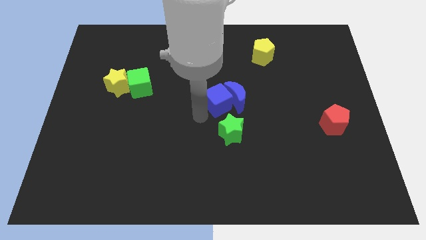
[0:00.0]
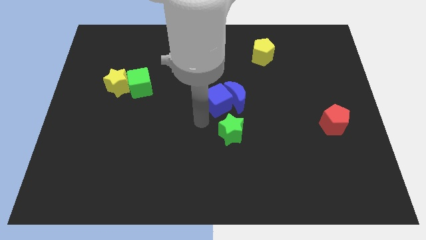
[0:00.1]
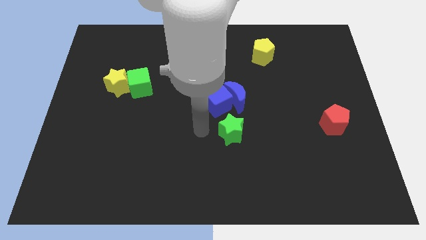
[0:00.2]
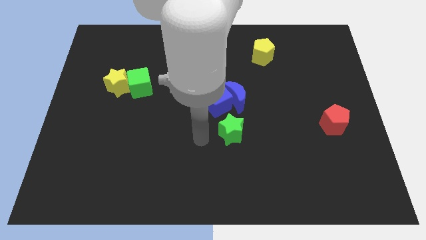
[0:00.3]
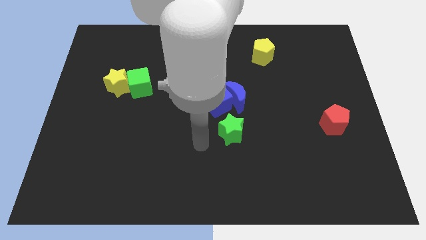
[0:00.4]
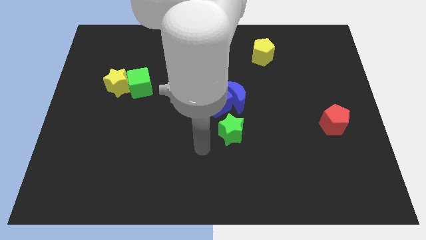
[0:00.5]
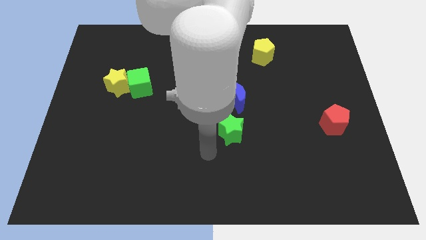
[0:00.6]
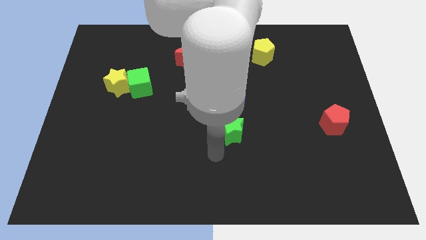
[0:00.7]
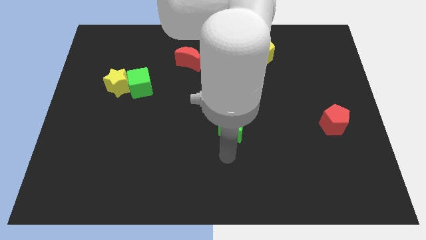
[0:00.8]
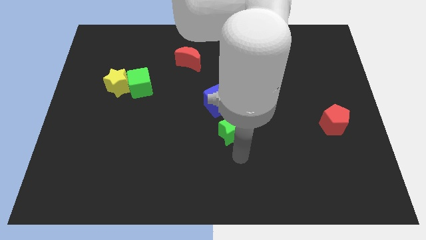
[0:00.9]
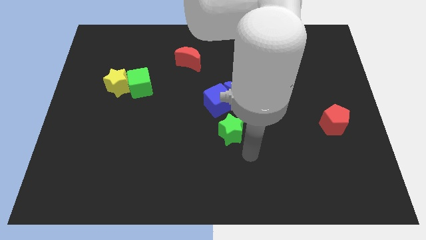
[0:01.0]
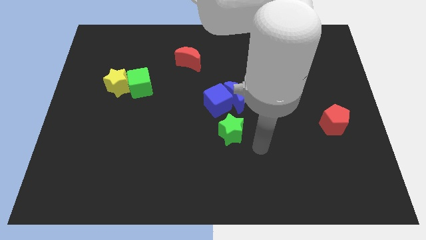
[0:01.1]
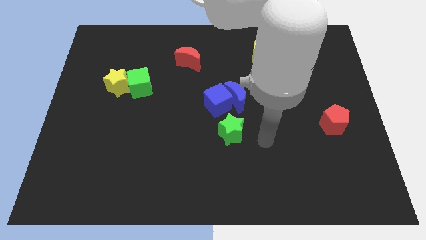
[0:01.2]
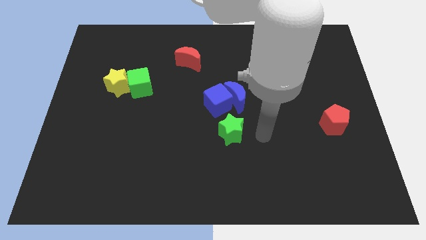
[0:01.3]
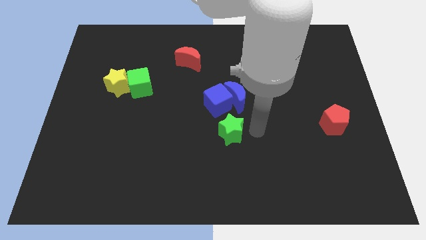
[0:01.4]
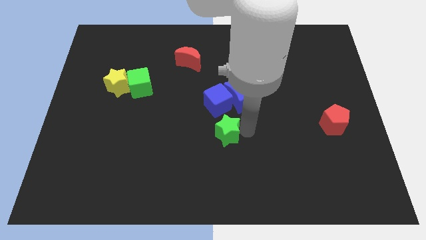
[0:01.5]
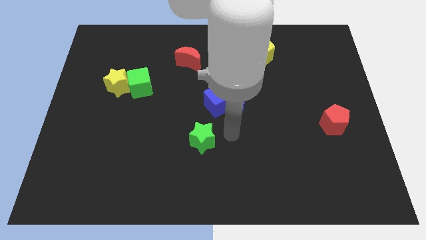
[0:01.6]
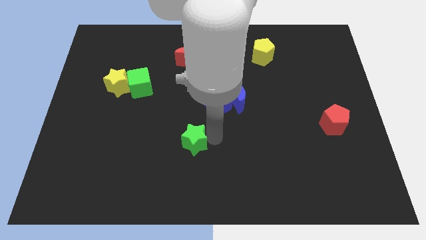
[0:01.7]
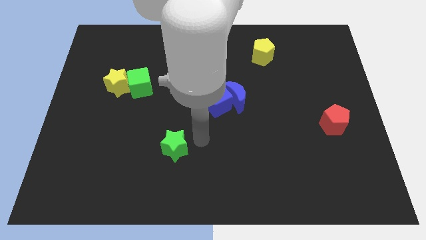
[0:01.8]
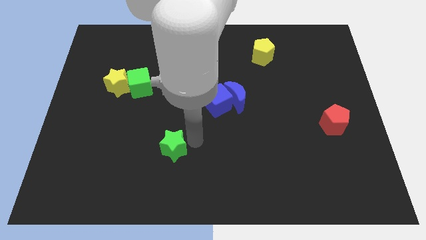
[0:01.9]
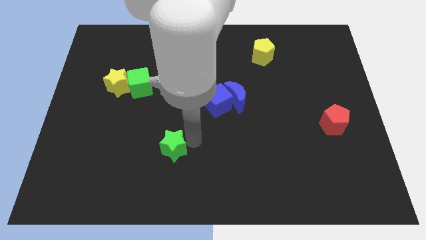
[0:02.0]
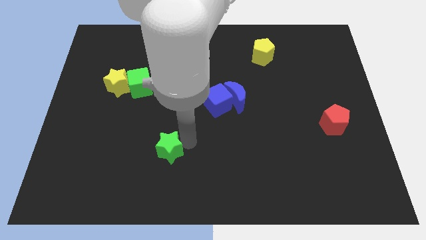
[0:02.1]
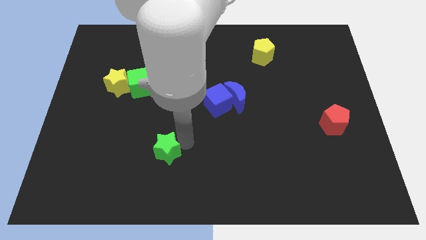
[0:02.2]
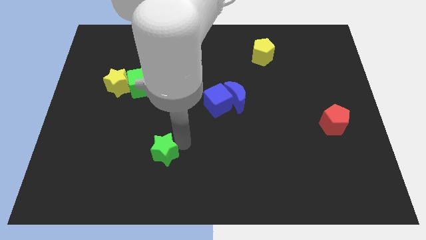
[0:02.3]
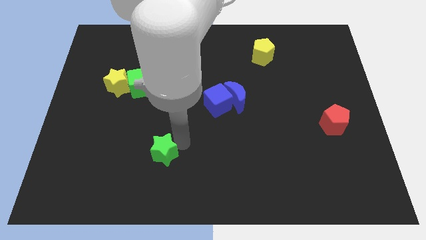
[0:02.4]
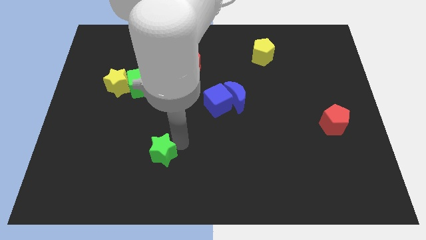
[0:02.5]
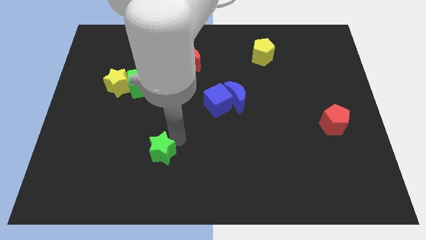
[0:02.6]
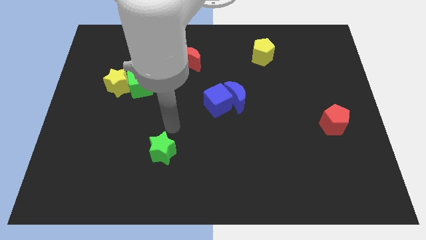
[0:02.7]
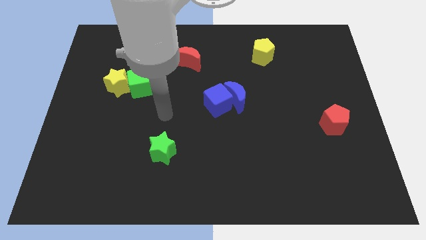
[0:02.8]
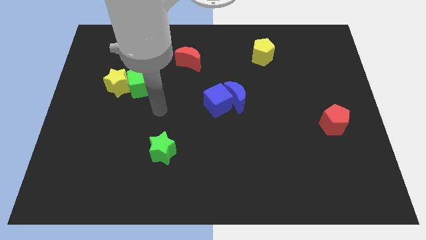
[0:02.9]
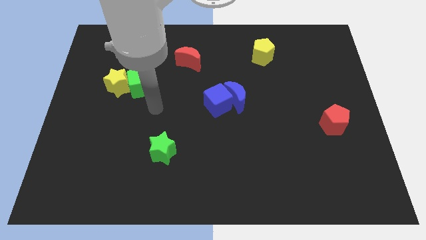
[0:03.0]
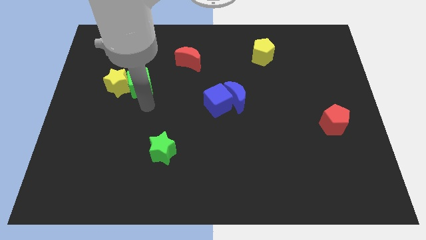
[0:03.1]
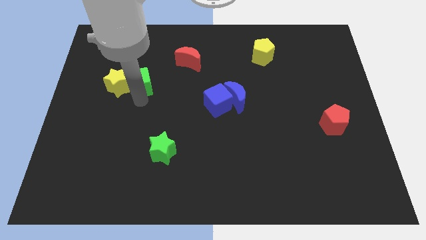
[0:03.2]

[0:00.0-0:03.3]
move green star away from the blue cube

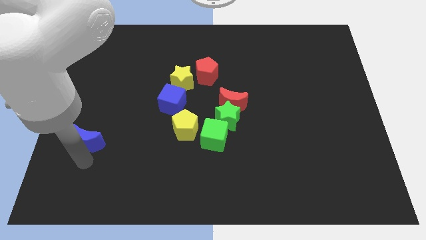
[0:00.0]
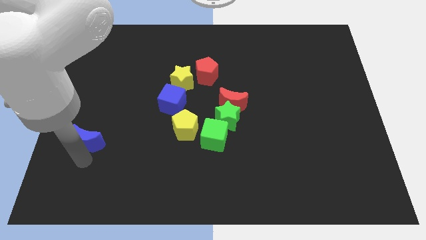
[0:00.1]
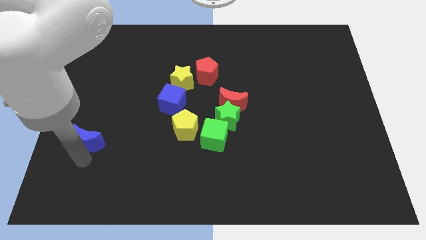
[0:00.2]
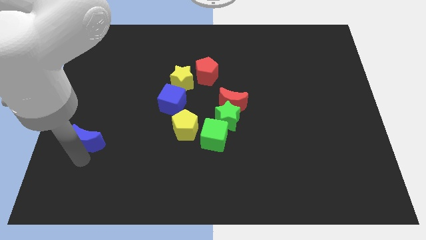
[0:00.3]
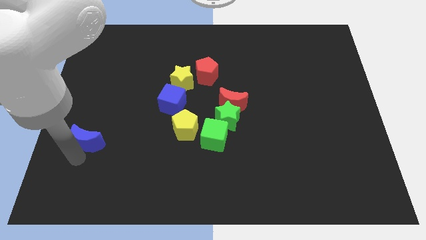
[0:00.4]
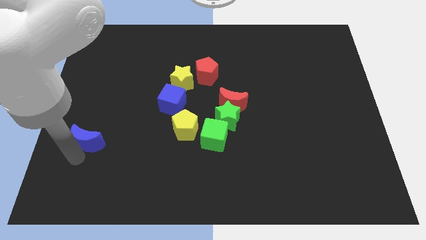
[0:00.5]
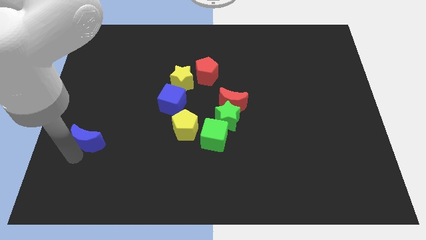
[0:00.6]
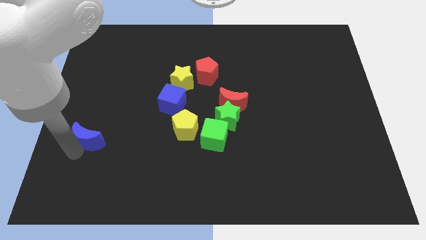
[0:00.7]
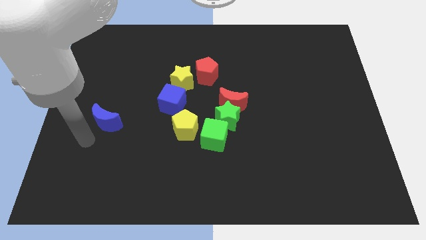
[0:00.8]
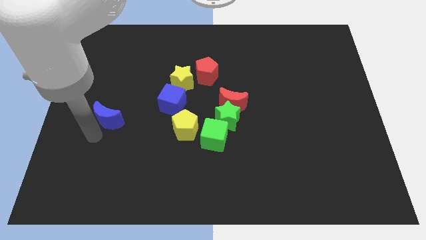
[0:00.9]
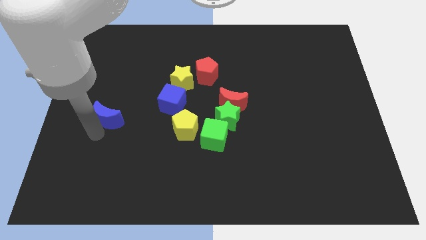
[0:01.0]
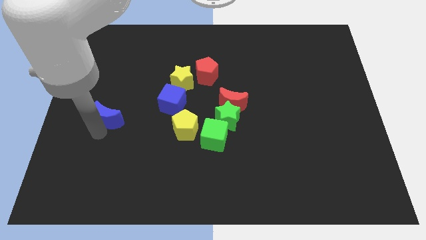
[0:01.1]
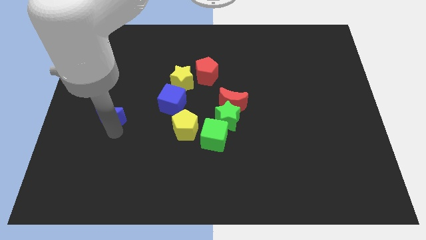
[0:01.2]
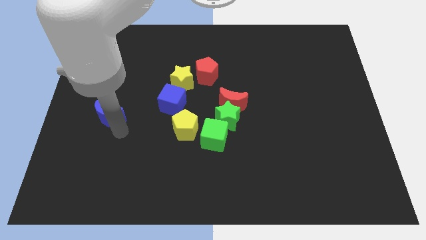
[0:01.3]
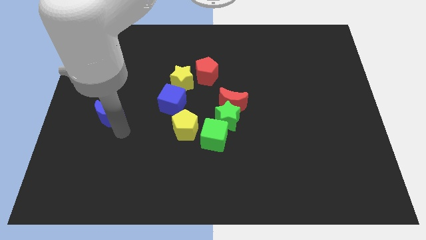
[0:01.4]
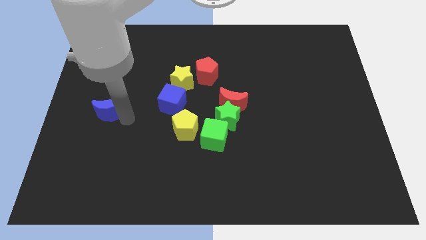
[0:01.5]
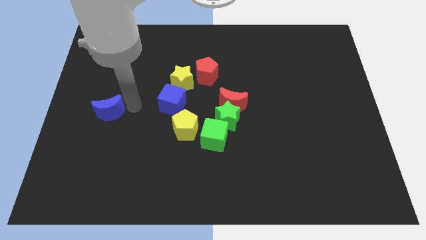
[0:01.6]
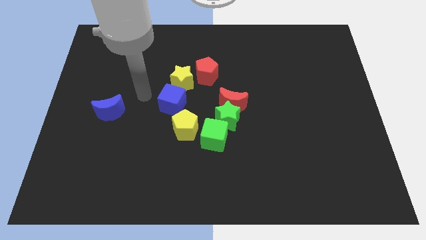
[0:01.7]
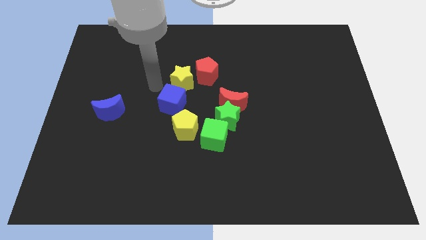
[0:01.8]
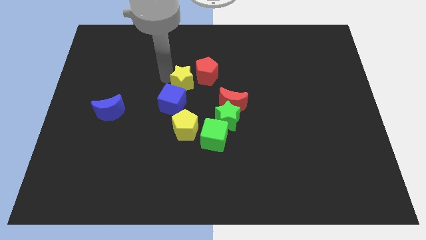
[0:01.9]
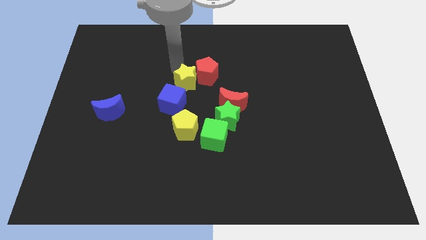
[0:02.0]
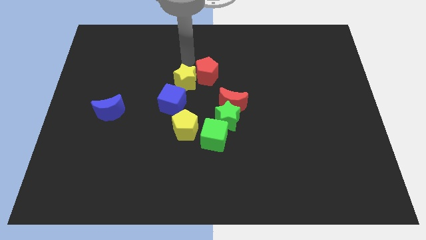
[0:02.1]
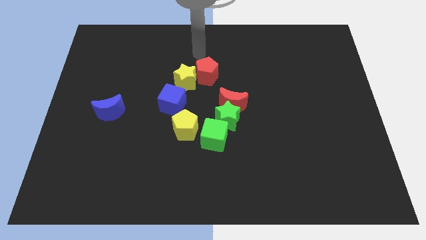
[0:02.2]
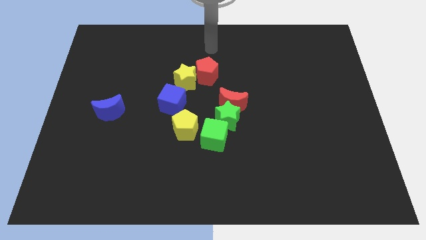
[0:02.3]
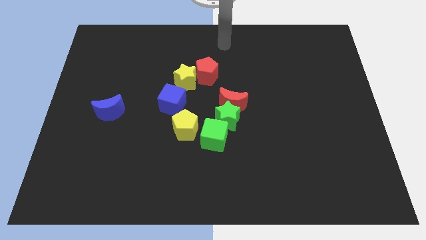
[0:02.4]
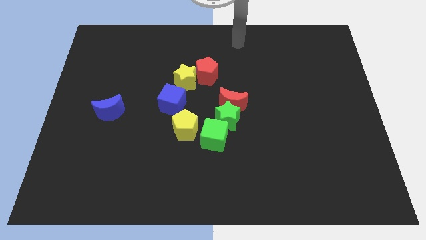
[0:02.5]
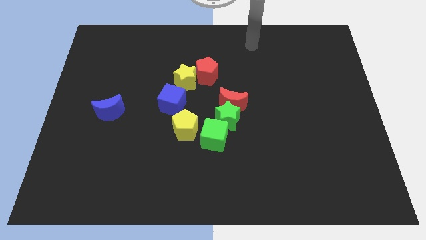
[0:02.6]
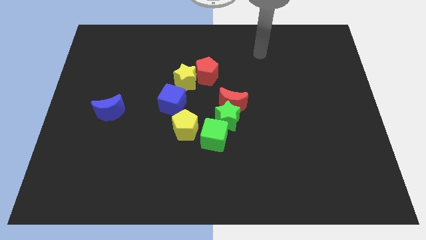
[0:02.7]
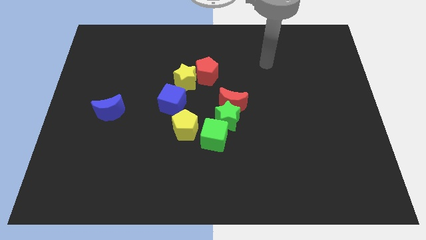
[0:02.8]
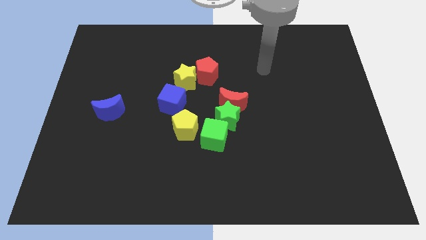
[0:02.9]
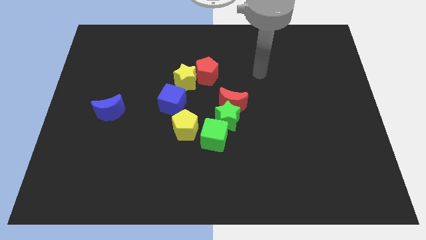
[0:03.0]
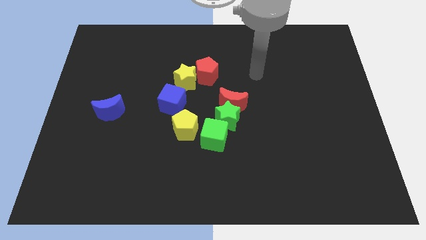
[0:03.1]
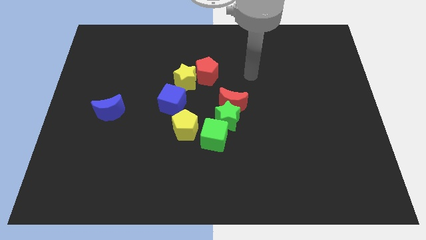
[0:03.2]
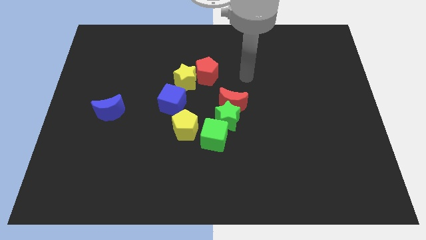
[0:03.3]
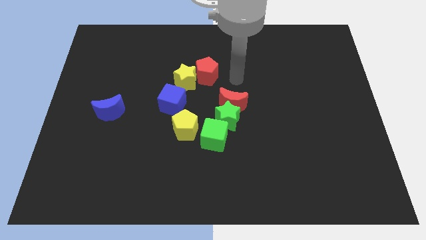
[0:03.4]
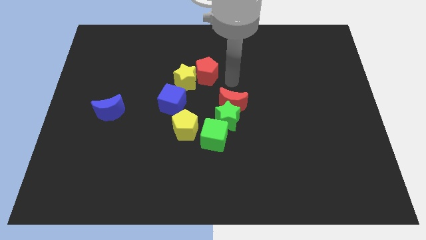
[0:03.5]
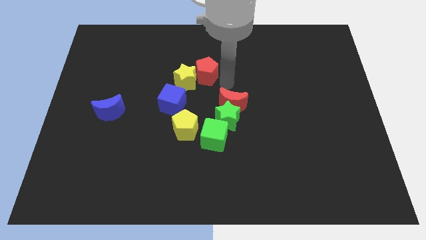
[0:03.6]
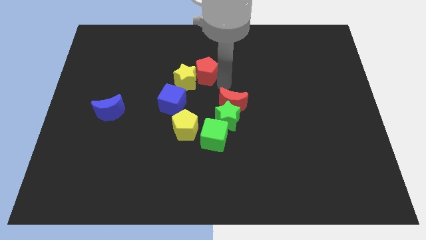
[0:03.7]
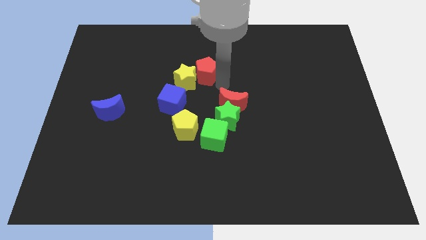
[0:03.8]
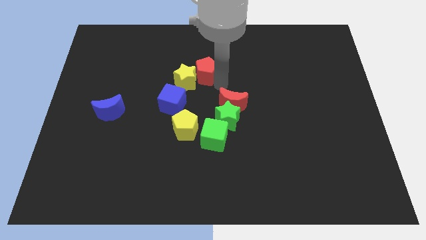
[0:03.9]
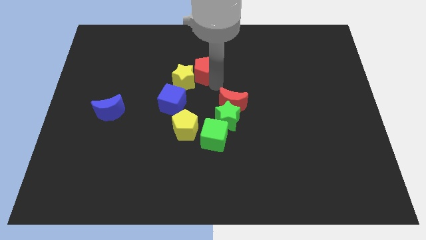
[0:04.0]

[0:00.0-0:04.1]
move your arm away from the blue moon

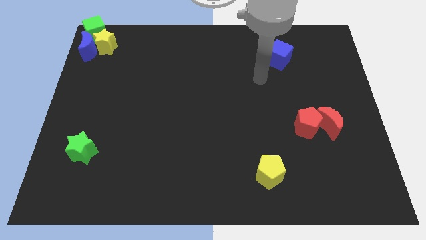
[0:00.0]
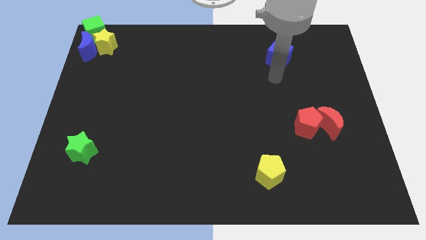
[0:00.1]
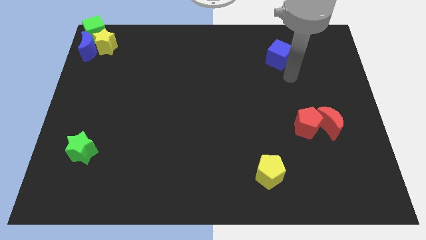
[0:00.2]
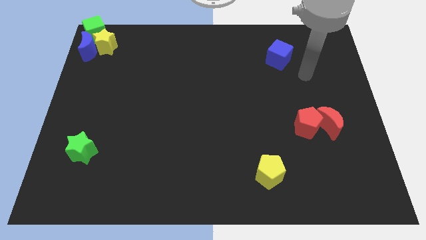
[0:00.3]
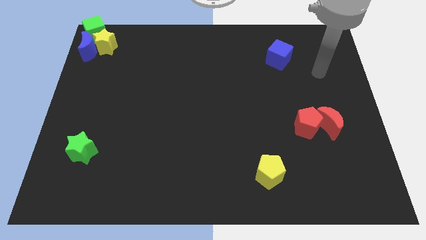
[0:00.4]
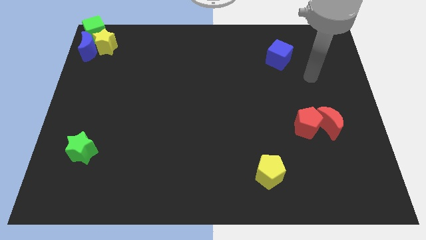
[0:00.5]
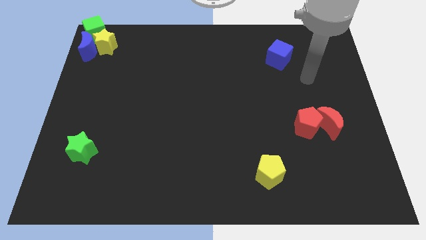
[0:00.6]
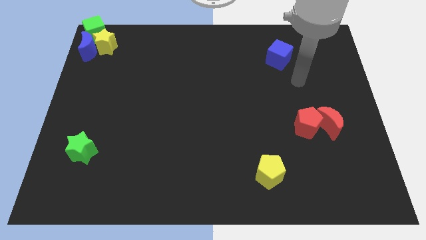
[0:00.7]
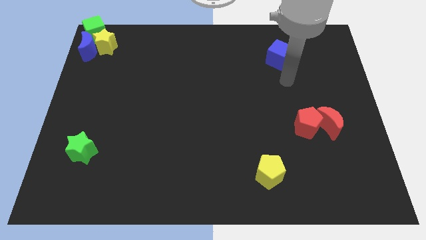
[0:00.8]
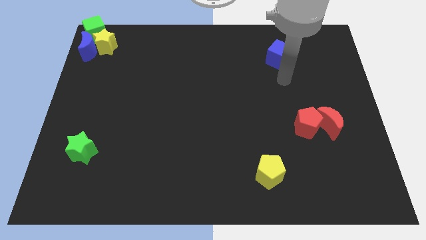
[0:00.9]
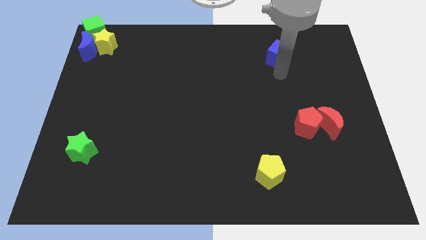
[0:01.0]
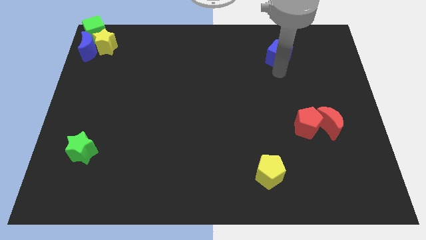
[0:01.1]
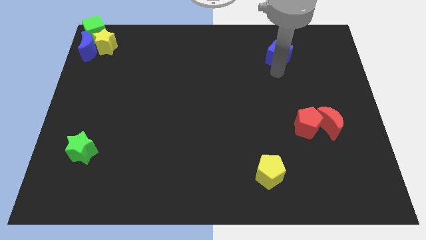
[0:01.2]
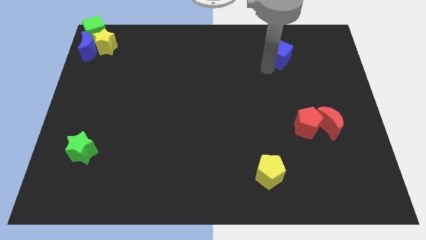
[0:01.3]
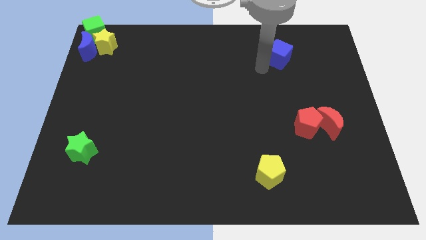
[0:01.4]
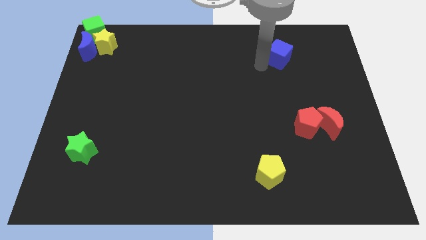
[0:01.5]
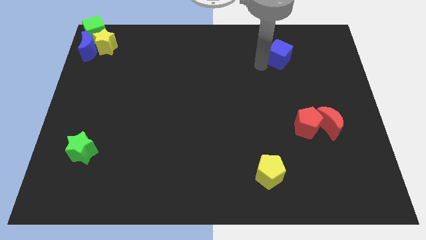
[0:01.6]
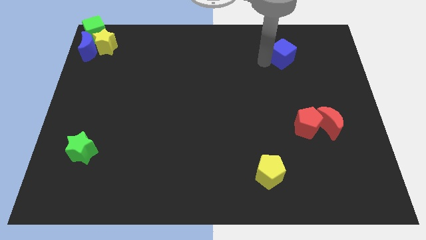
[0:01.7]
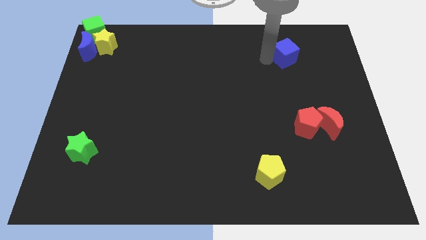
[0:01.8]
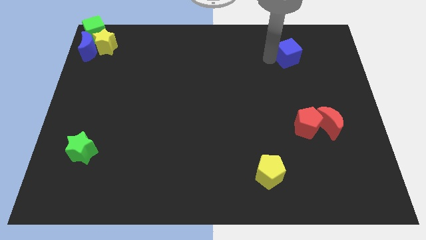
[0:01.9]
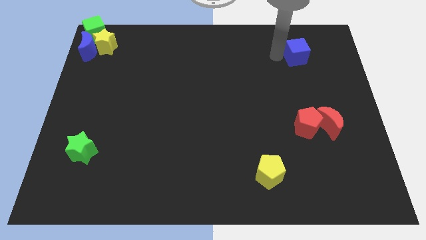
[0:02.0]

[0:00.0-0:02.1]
move the blue cube towards top
